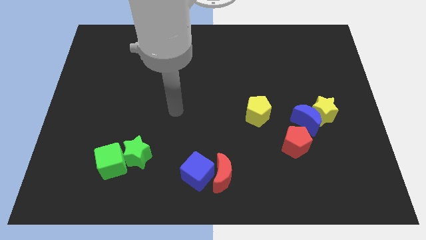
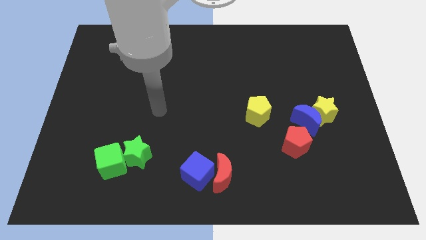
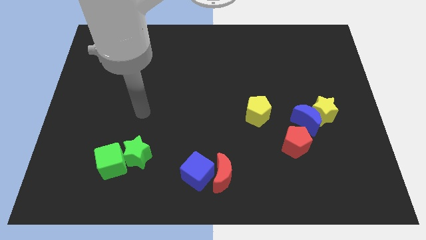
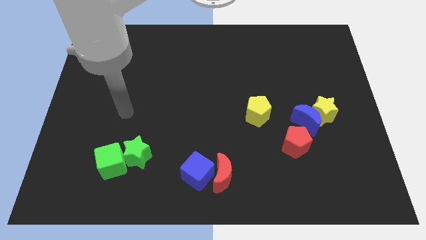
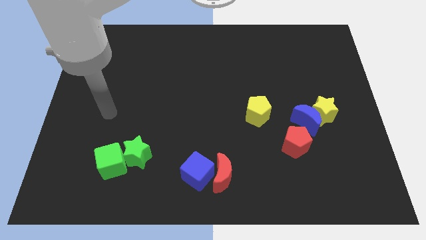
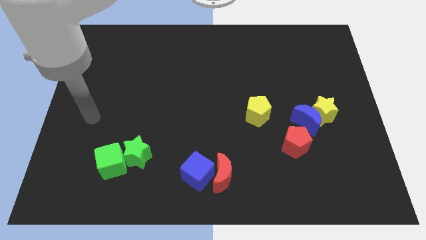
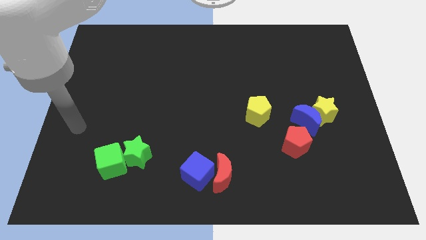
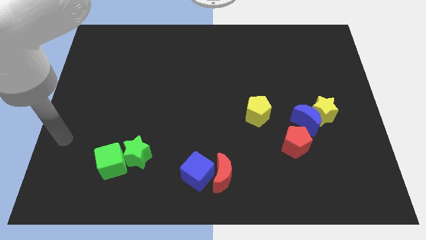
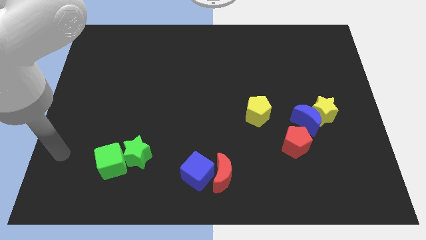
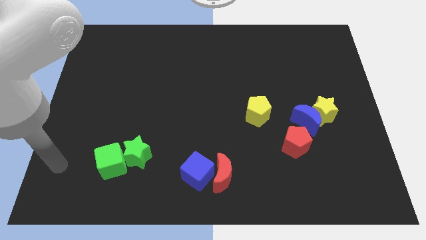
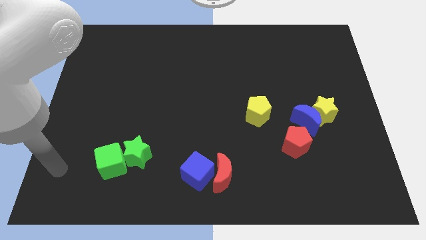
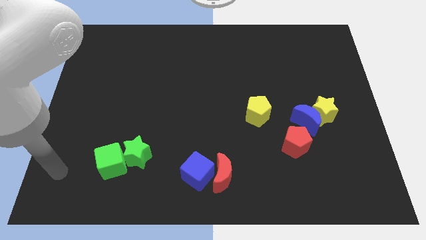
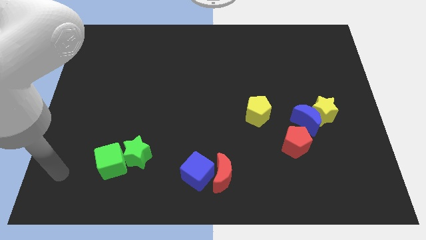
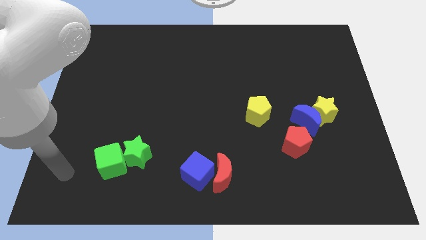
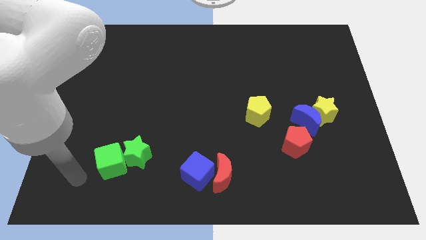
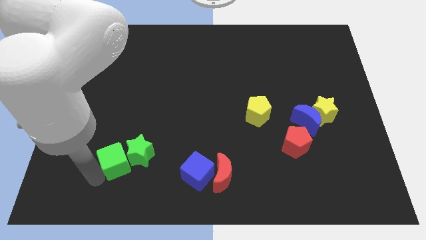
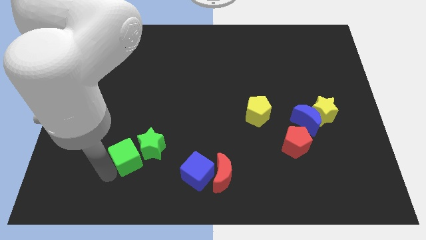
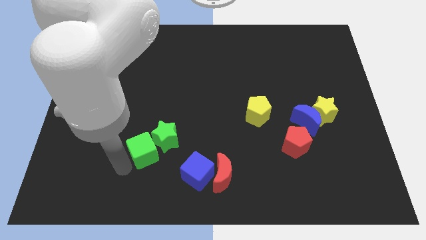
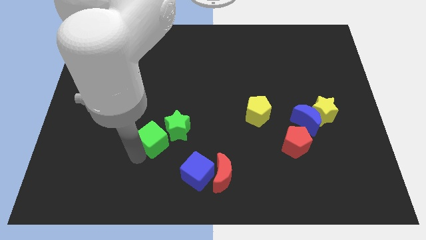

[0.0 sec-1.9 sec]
move the green blocks towards the center of the board

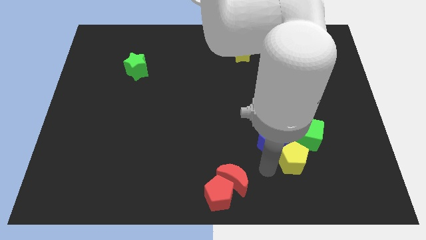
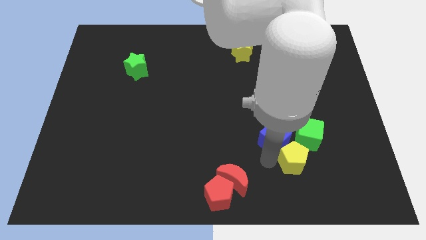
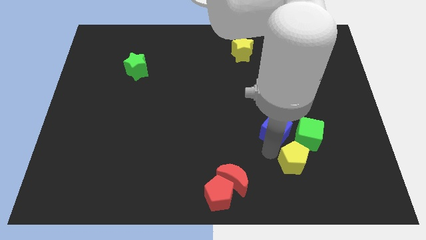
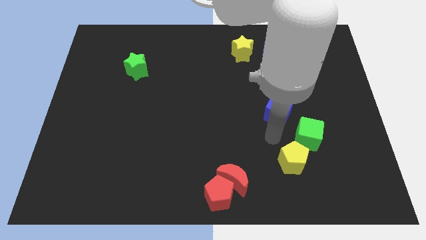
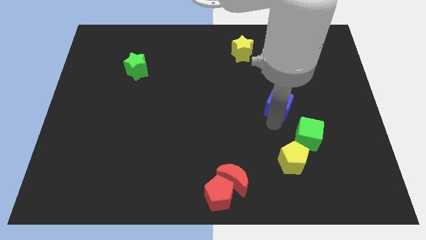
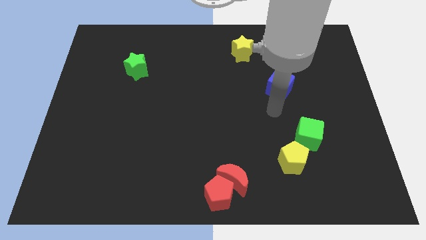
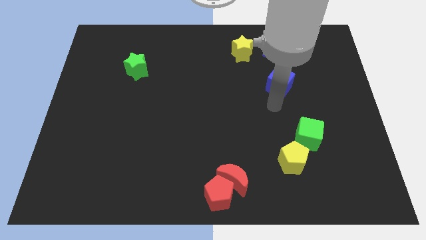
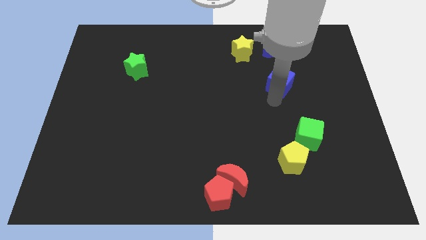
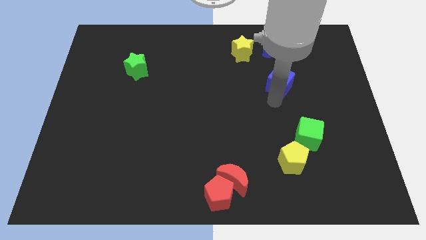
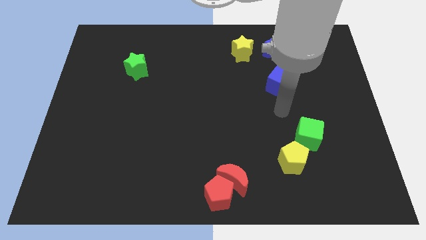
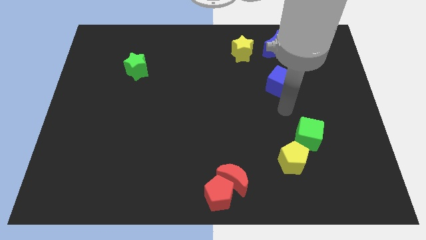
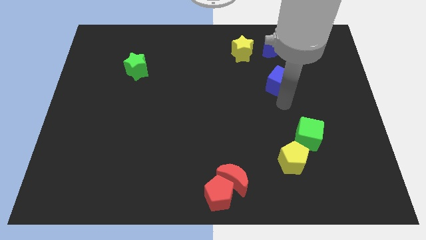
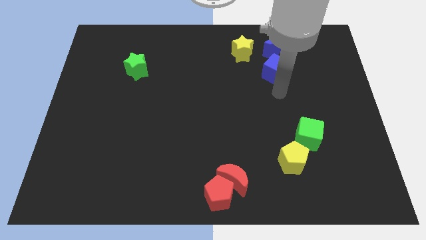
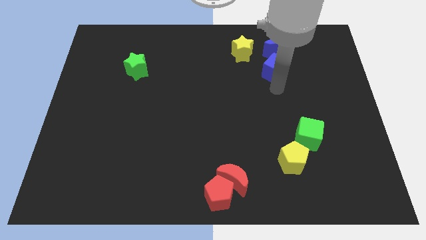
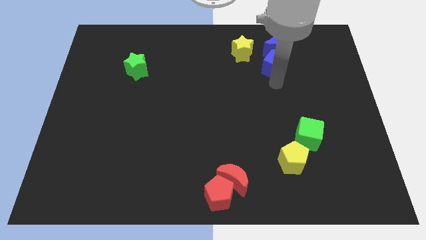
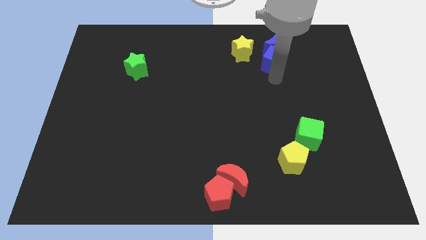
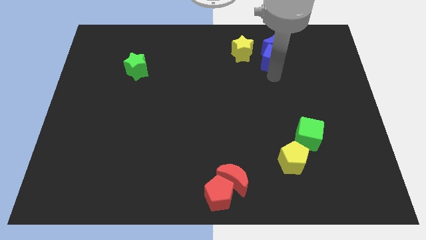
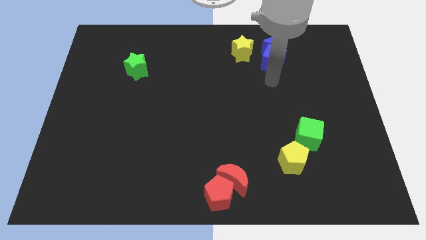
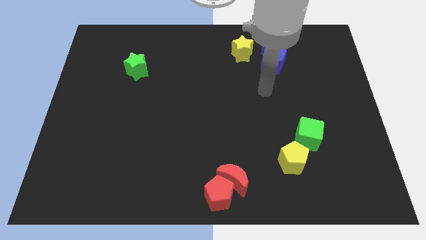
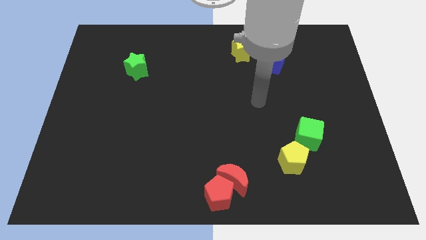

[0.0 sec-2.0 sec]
place the blue cube bottom to the blue crescent

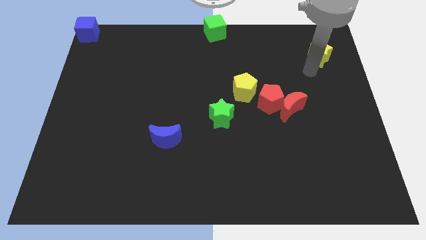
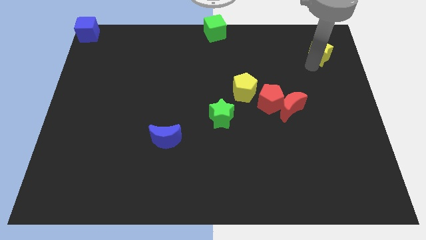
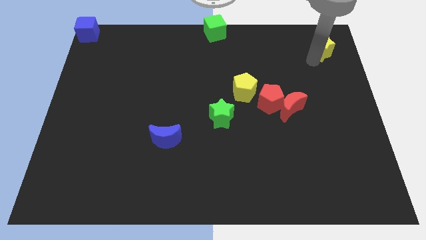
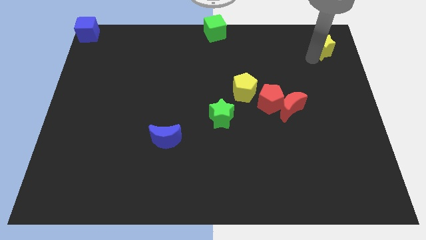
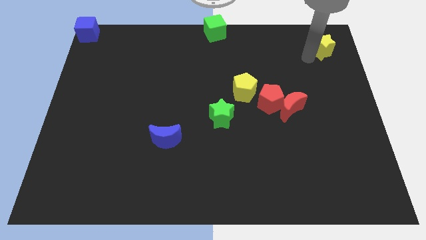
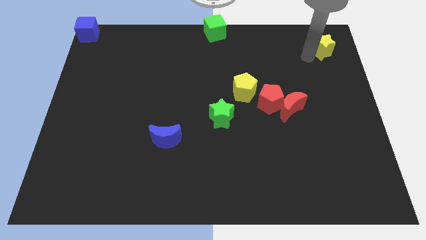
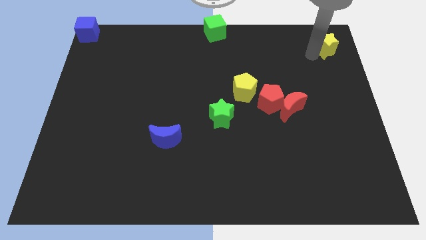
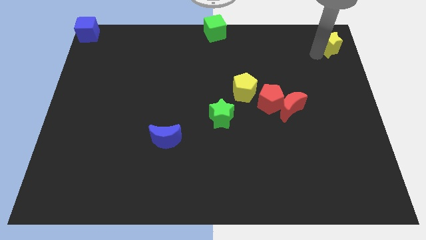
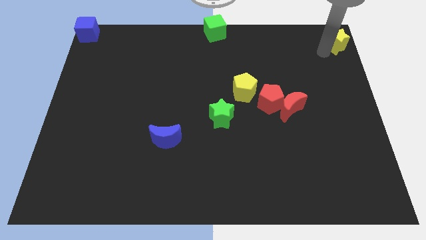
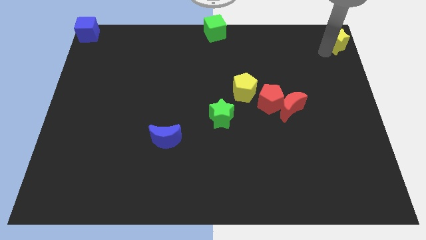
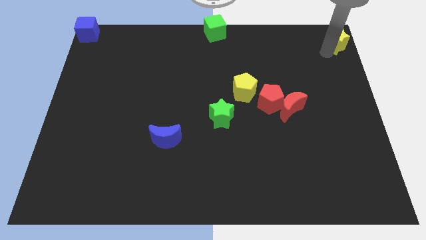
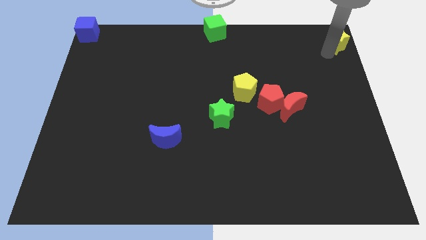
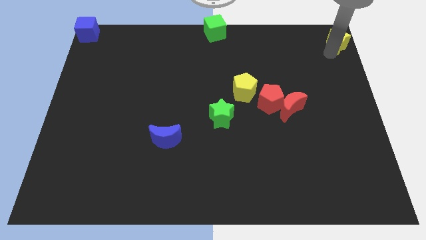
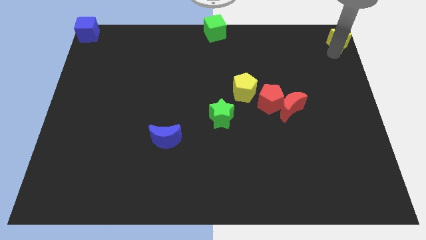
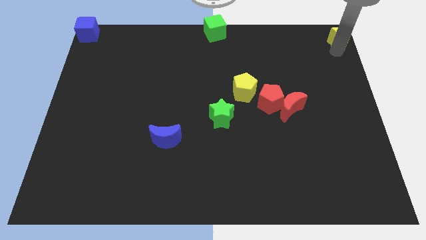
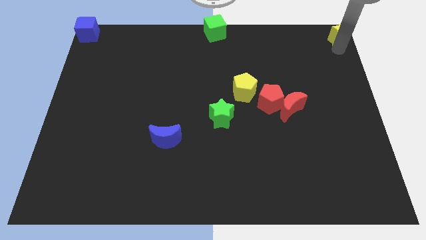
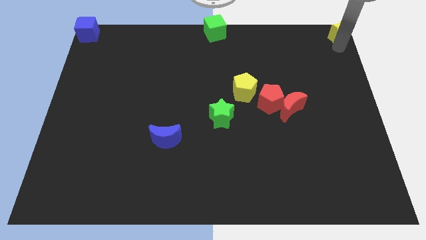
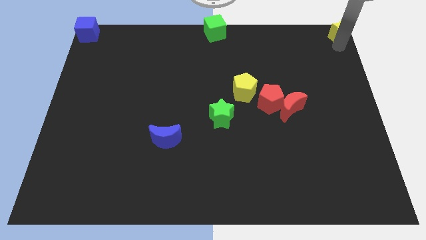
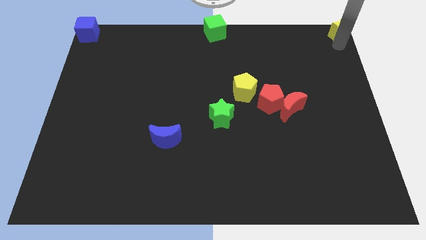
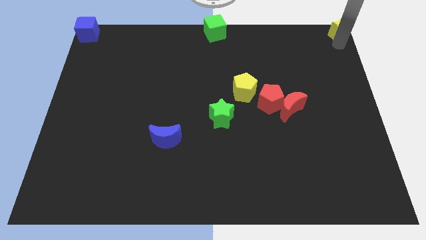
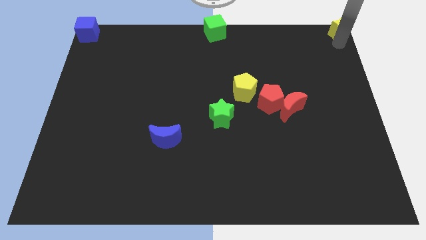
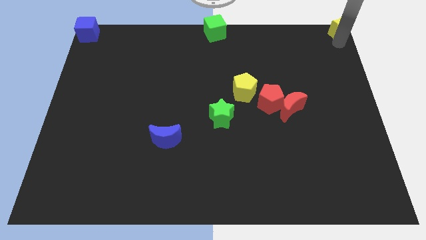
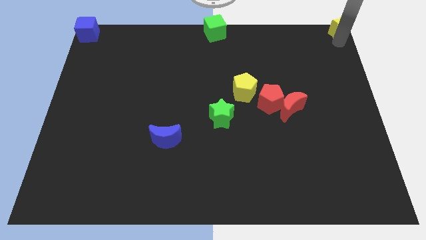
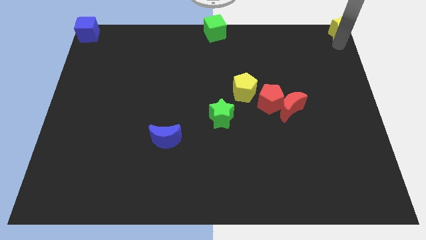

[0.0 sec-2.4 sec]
move the yellow star to the top right corner of the board

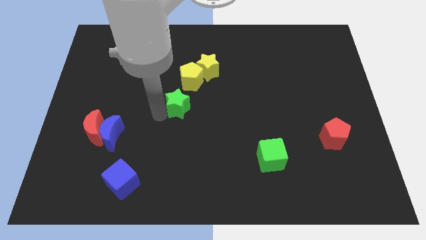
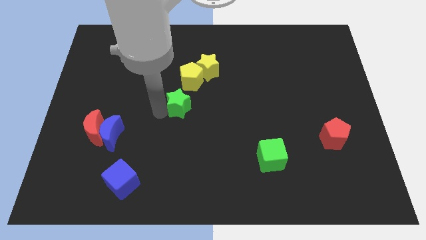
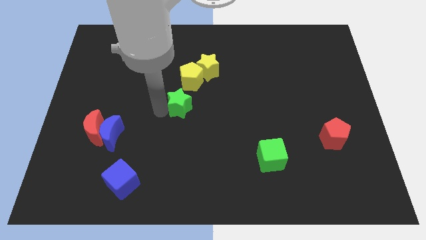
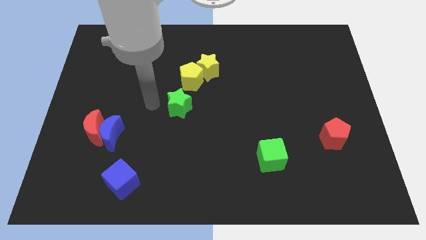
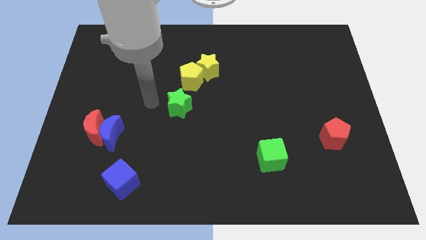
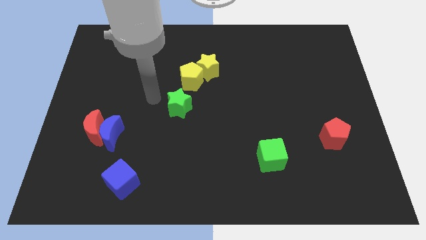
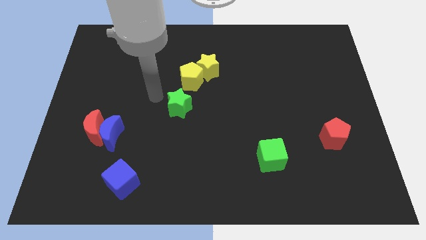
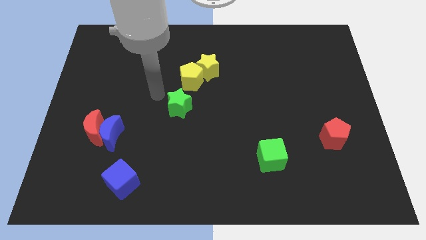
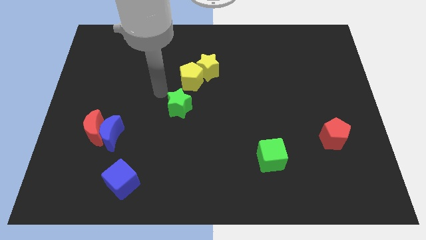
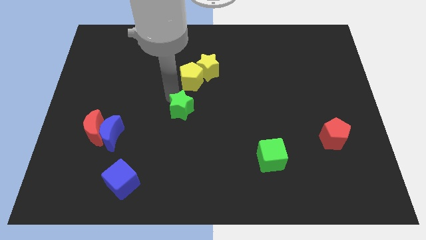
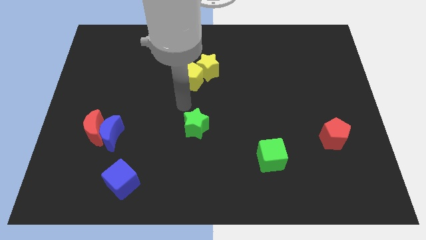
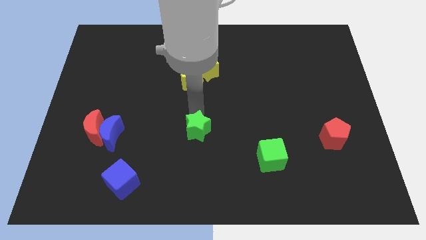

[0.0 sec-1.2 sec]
push the green star vertically below the yellow pentagon

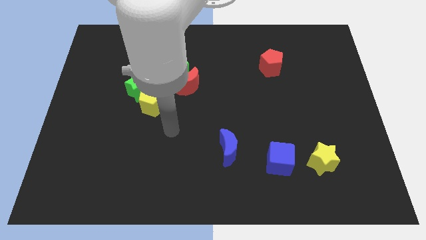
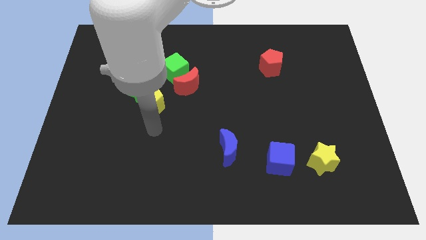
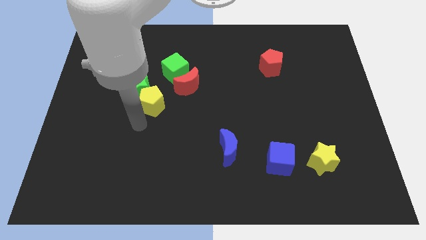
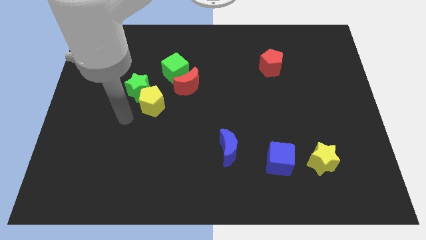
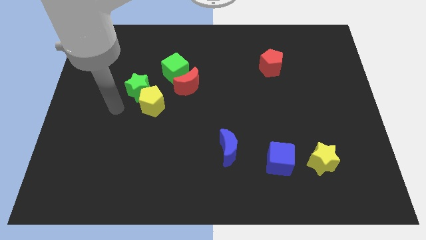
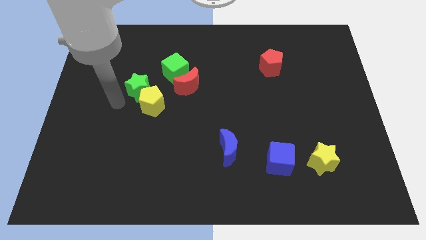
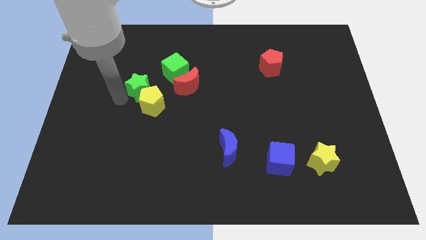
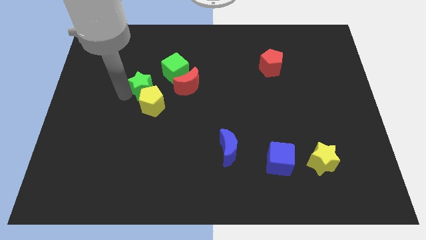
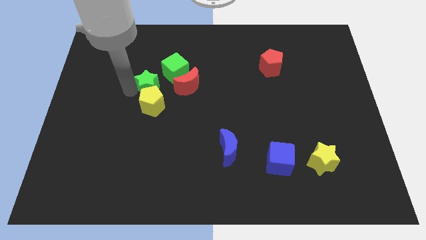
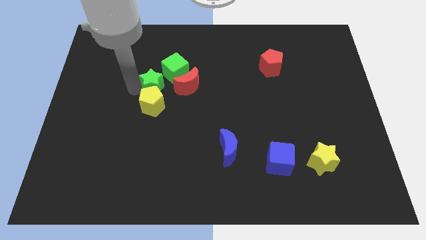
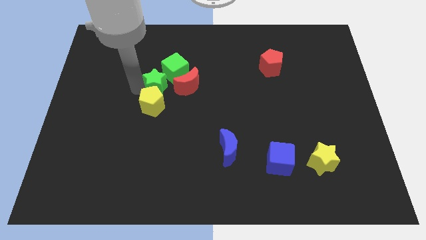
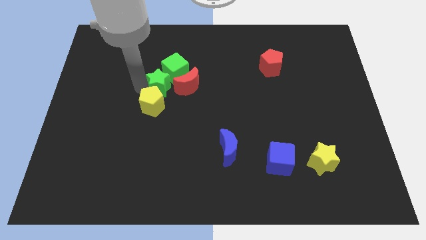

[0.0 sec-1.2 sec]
push green star into the green cube

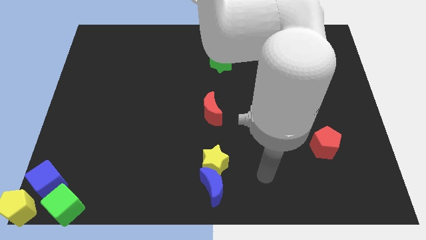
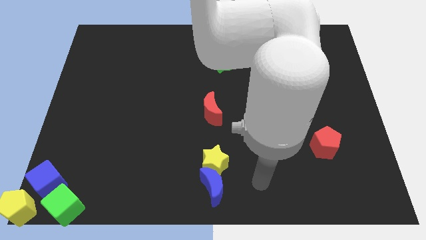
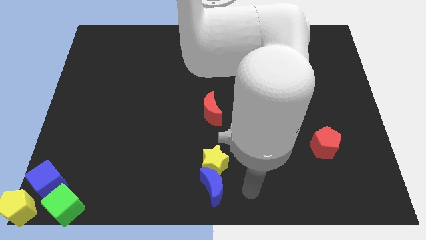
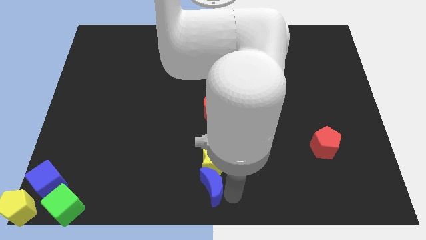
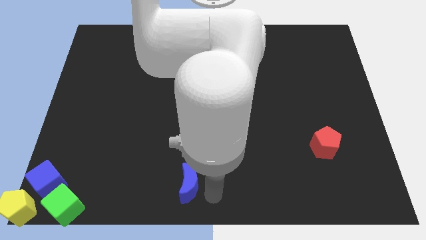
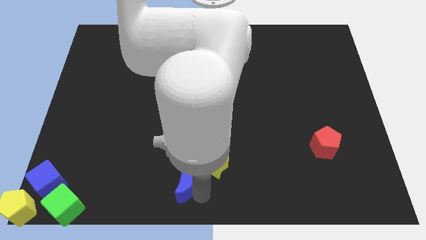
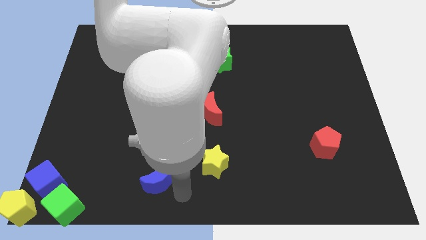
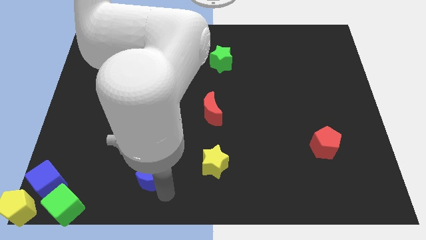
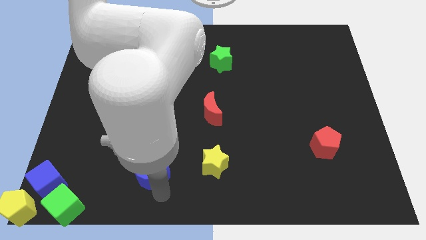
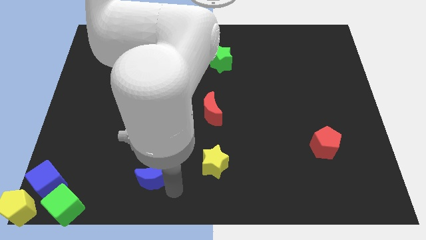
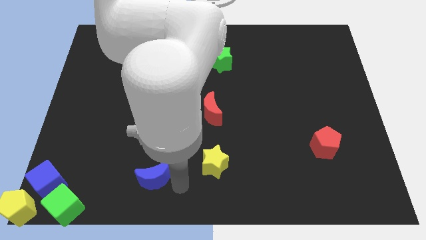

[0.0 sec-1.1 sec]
move blue crescent from yellow star
